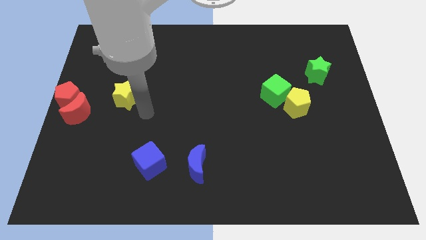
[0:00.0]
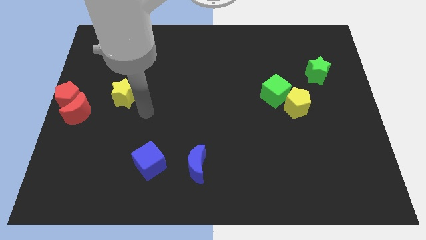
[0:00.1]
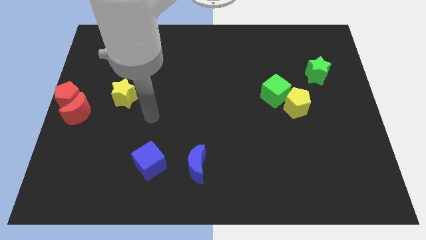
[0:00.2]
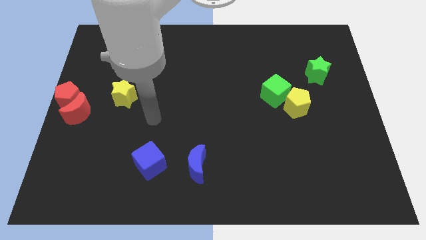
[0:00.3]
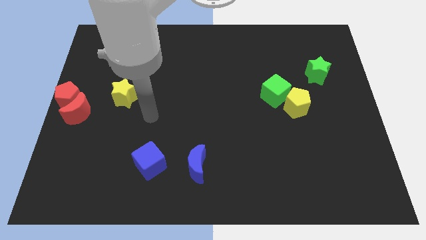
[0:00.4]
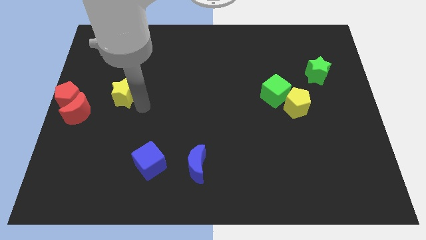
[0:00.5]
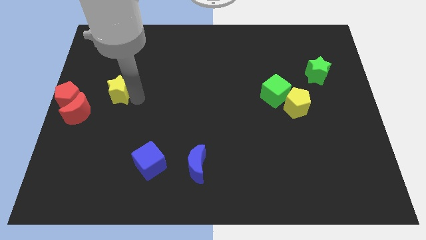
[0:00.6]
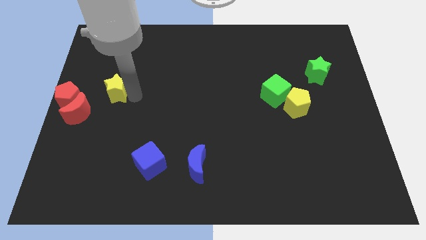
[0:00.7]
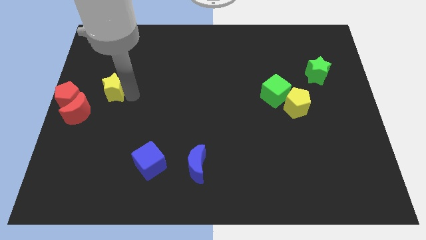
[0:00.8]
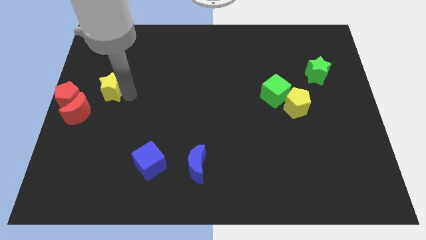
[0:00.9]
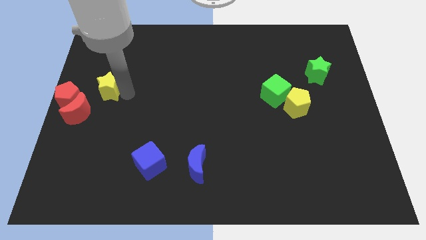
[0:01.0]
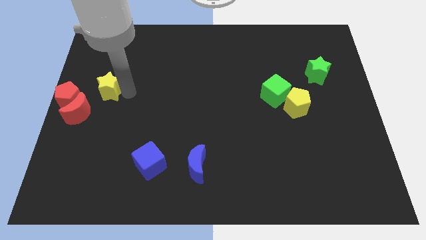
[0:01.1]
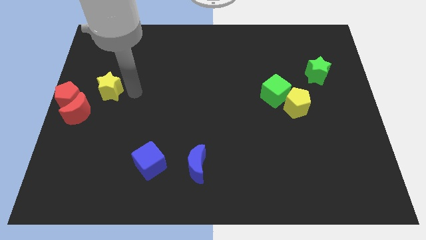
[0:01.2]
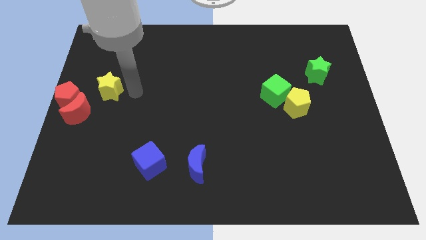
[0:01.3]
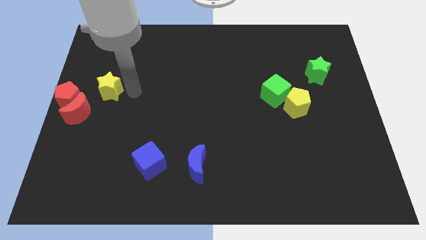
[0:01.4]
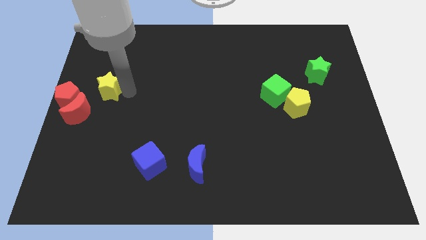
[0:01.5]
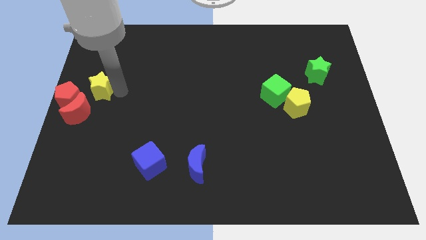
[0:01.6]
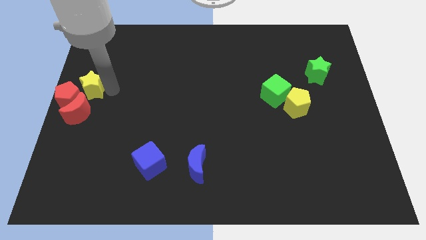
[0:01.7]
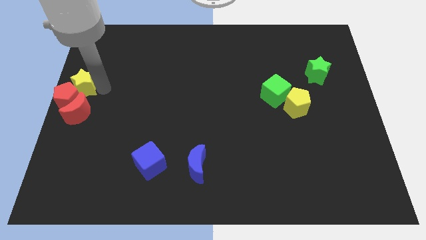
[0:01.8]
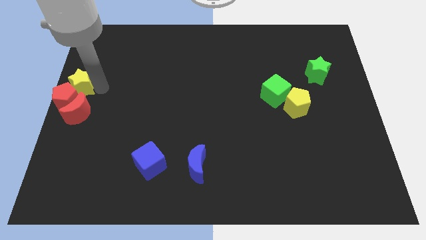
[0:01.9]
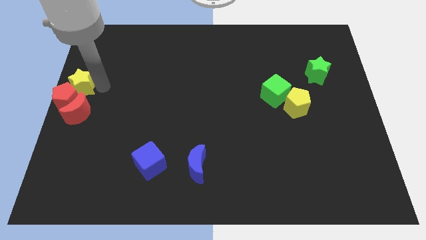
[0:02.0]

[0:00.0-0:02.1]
place the yellow star at the right of the red pentagon

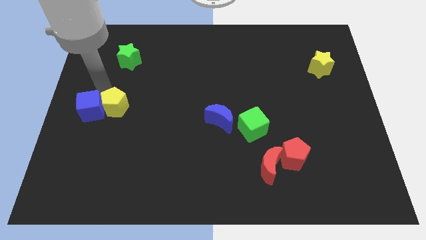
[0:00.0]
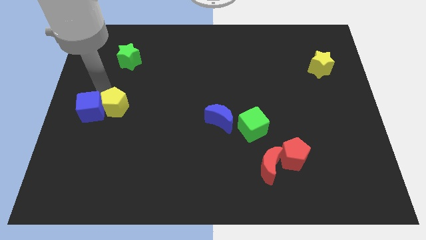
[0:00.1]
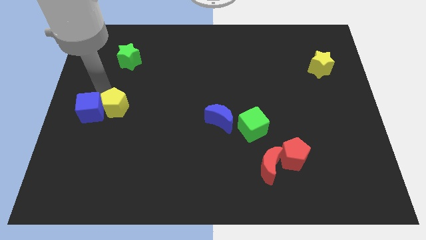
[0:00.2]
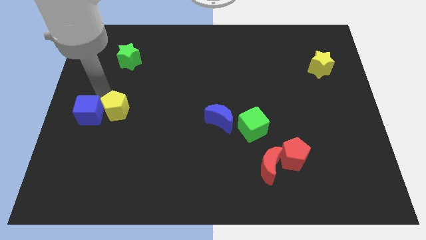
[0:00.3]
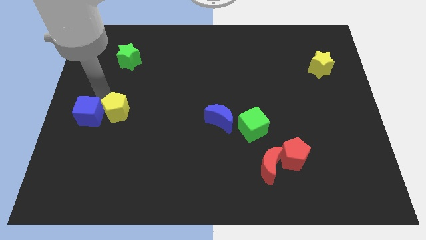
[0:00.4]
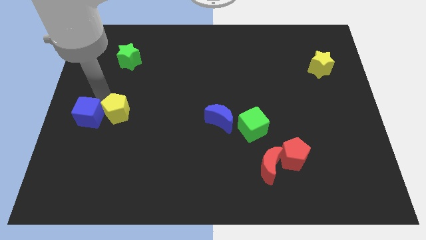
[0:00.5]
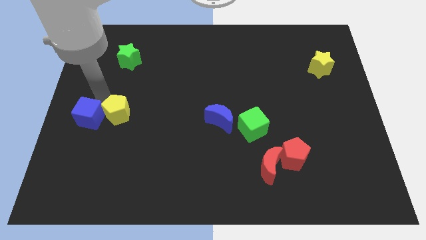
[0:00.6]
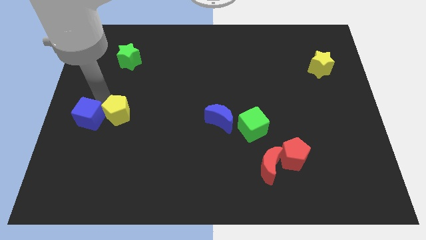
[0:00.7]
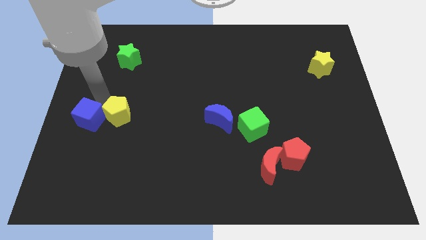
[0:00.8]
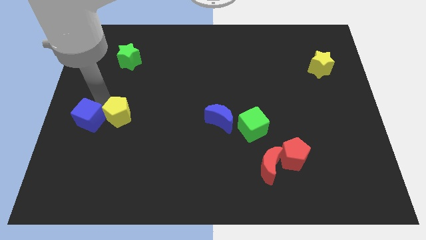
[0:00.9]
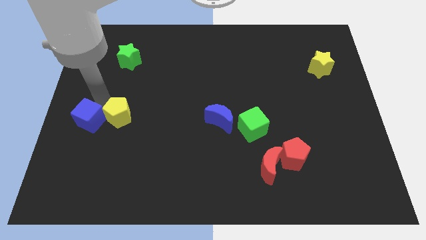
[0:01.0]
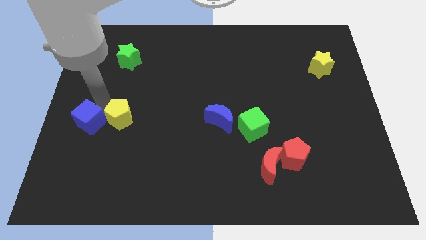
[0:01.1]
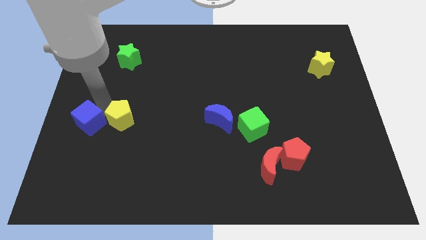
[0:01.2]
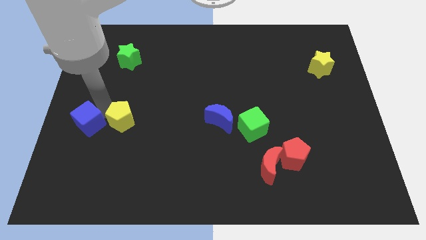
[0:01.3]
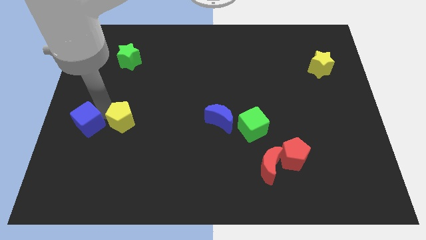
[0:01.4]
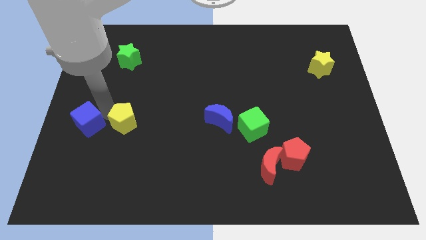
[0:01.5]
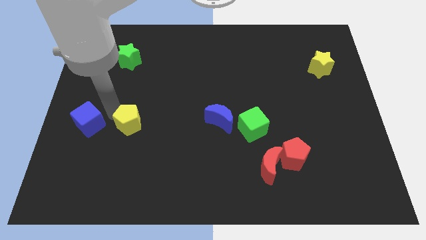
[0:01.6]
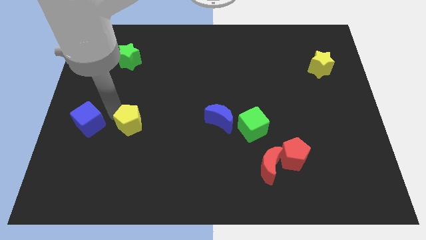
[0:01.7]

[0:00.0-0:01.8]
separate the yellow pentagon from the blue cube

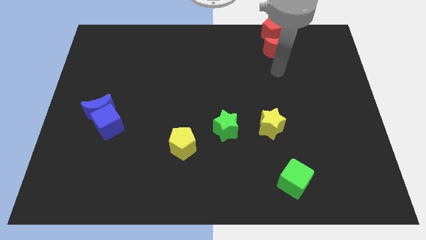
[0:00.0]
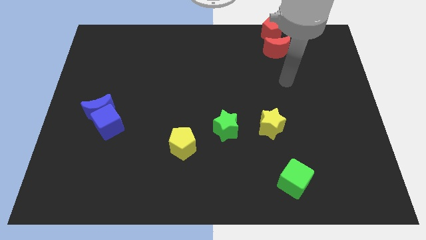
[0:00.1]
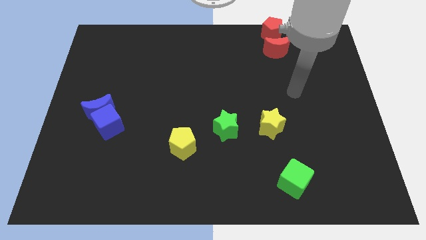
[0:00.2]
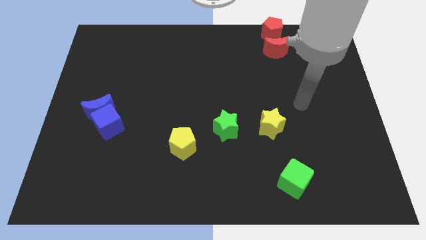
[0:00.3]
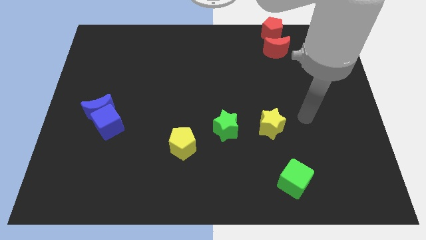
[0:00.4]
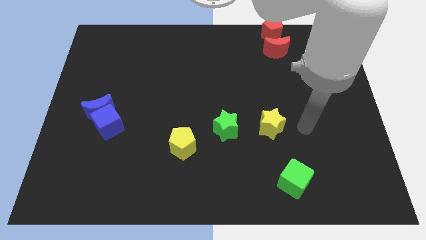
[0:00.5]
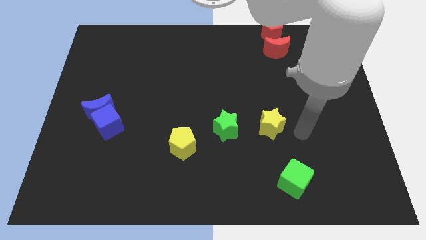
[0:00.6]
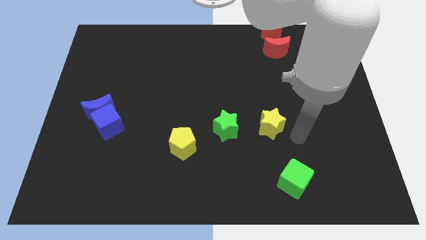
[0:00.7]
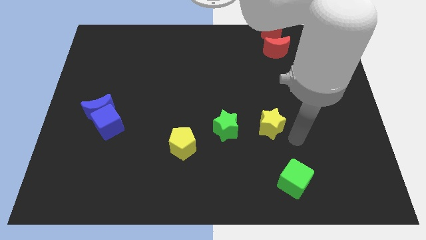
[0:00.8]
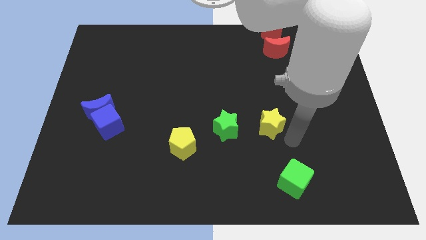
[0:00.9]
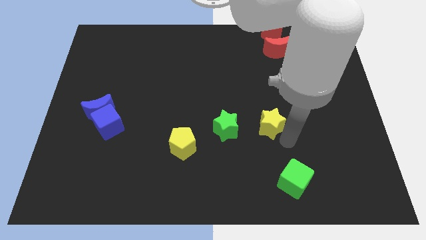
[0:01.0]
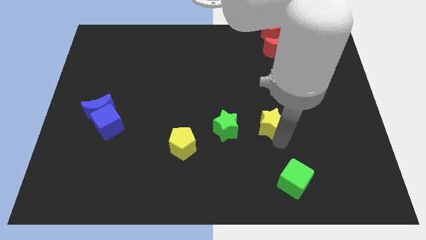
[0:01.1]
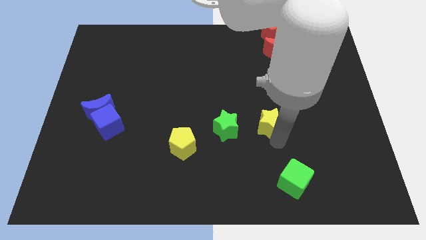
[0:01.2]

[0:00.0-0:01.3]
point your arm at the bottom of the yellow star

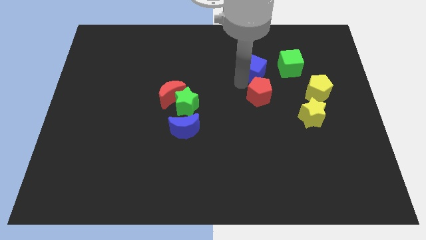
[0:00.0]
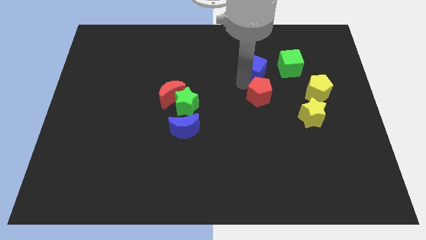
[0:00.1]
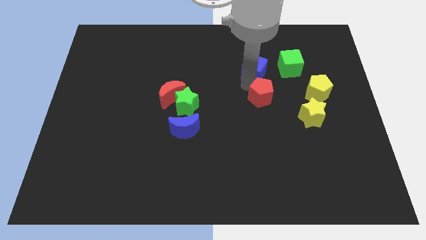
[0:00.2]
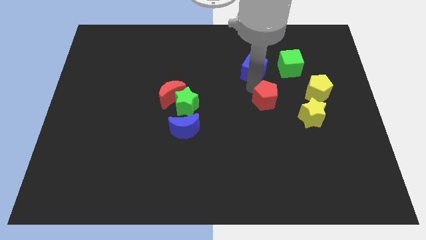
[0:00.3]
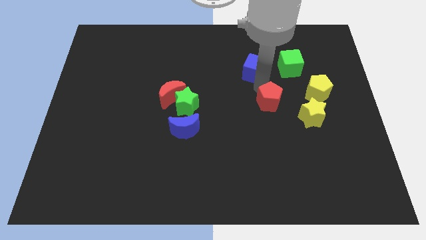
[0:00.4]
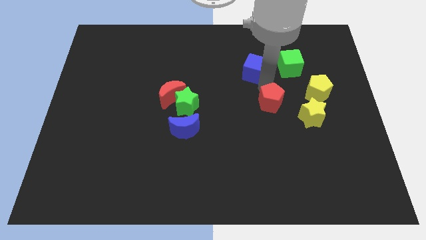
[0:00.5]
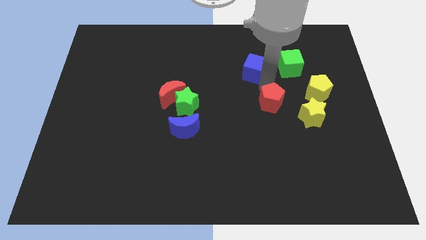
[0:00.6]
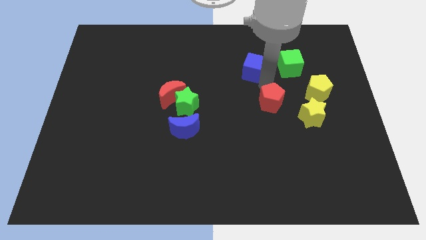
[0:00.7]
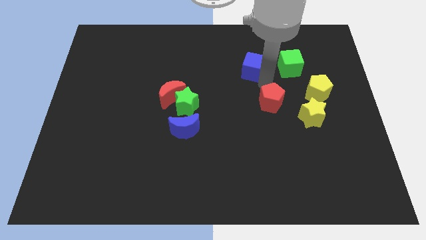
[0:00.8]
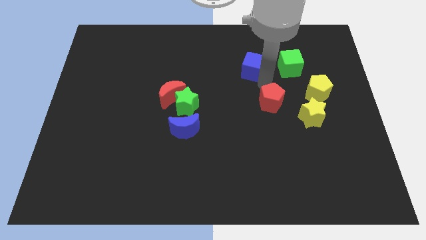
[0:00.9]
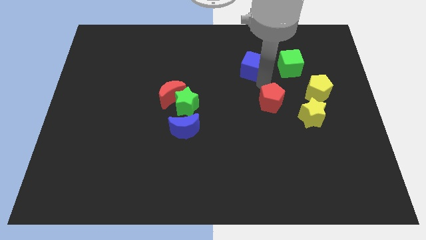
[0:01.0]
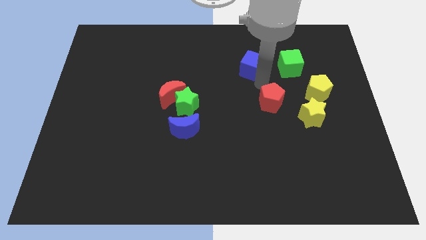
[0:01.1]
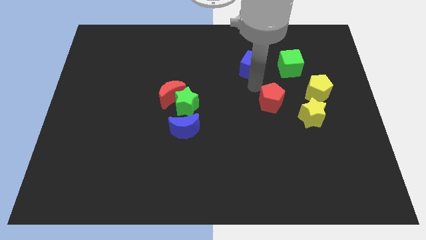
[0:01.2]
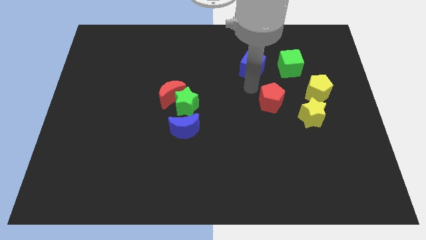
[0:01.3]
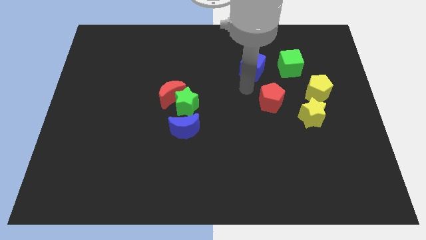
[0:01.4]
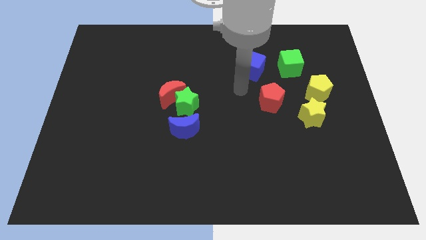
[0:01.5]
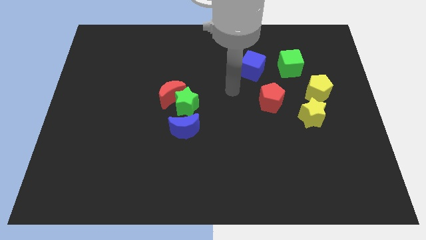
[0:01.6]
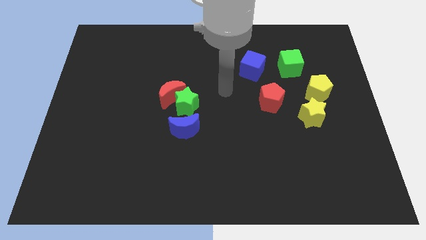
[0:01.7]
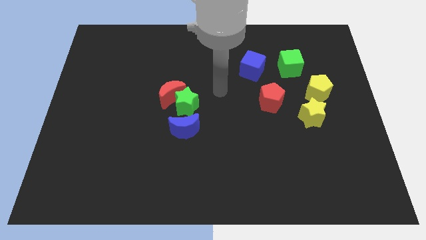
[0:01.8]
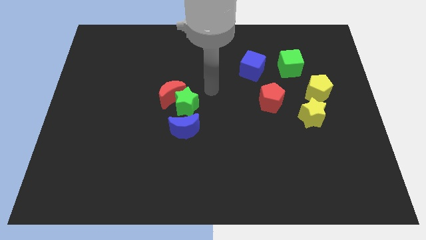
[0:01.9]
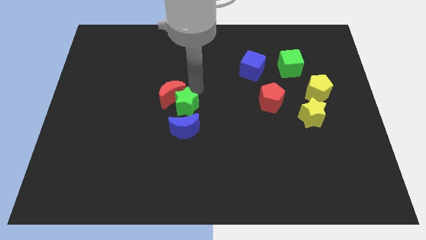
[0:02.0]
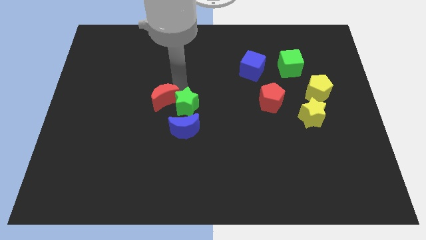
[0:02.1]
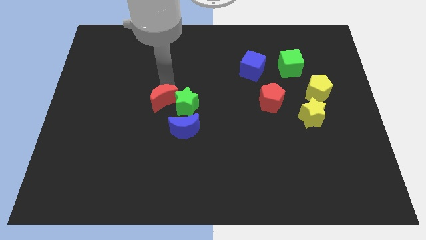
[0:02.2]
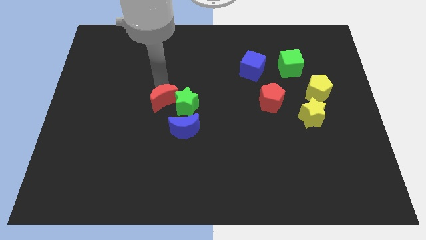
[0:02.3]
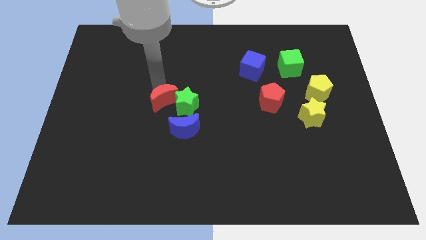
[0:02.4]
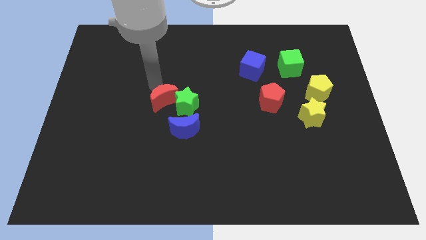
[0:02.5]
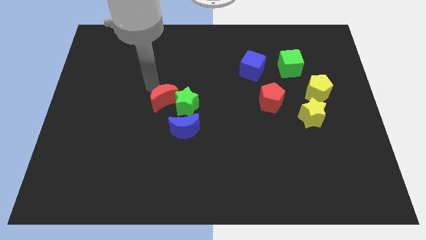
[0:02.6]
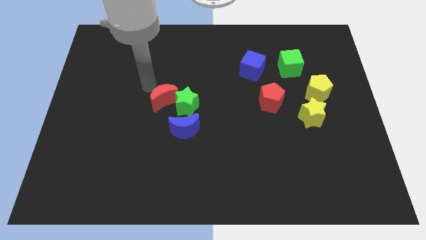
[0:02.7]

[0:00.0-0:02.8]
place your arm above red crescent

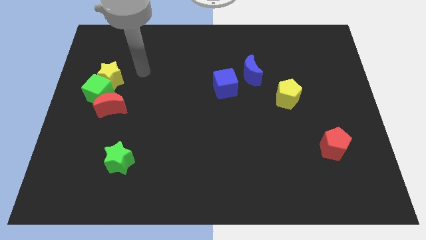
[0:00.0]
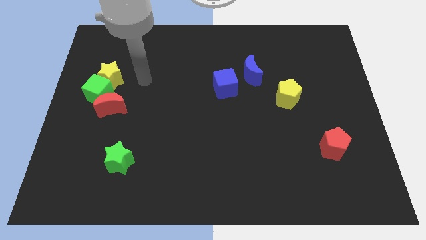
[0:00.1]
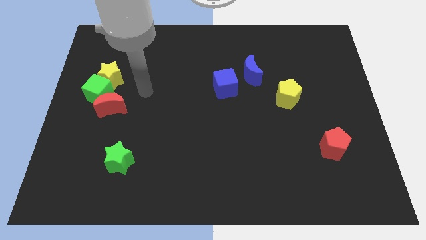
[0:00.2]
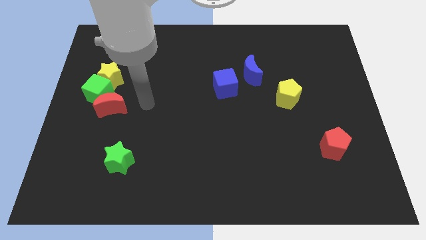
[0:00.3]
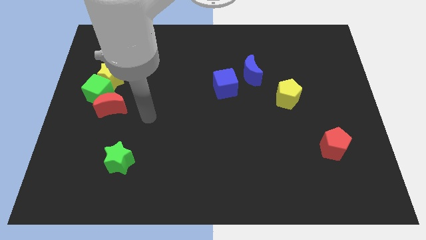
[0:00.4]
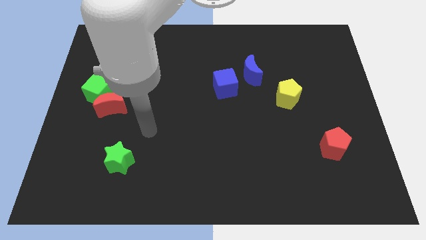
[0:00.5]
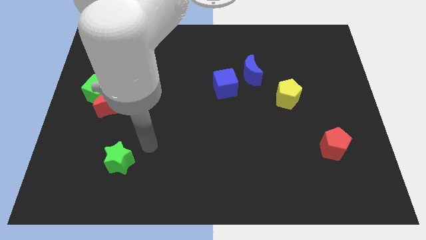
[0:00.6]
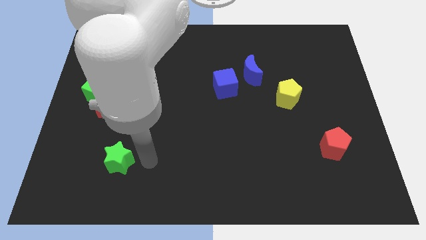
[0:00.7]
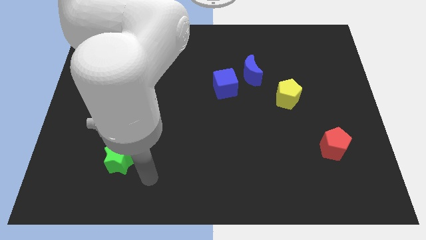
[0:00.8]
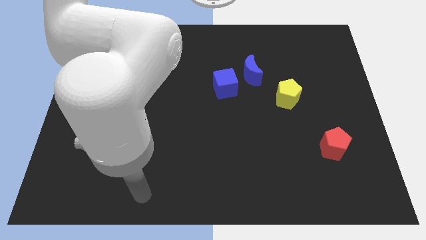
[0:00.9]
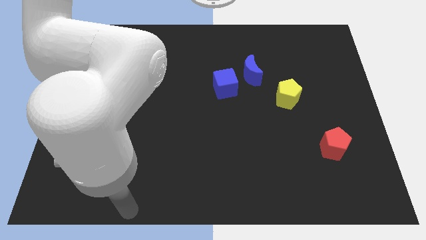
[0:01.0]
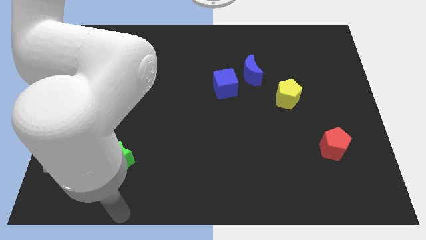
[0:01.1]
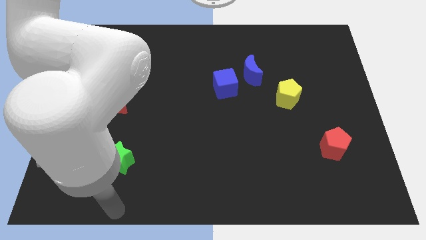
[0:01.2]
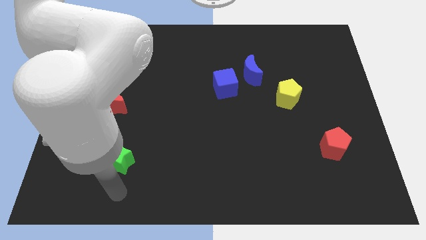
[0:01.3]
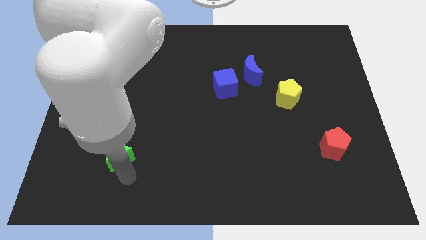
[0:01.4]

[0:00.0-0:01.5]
place the arm below the green star at bottom left
